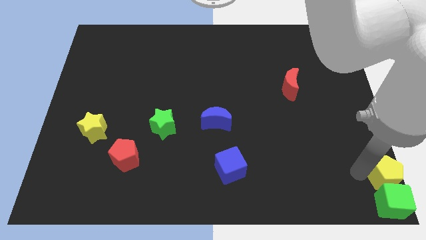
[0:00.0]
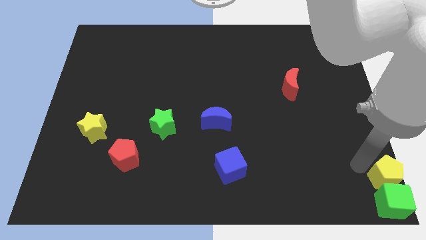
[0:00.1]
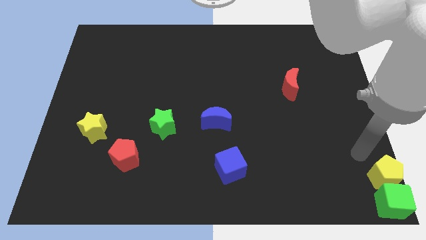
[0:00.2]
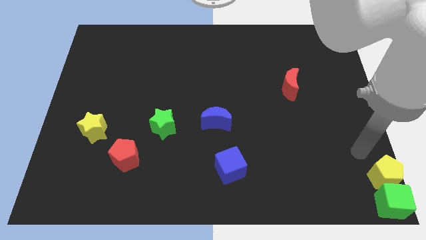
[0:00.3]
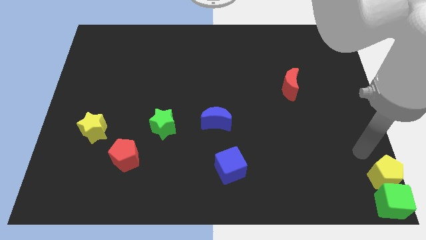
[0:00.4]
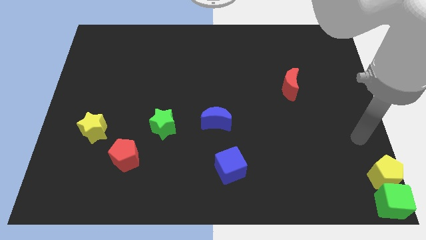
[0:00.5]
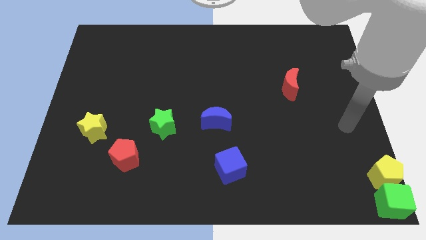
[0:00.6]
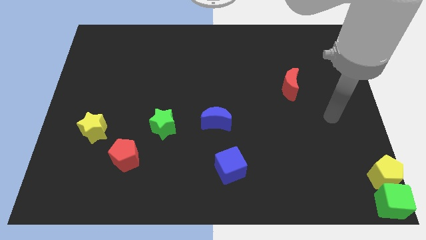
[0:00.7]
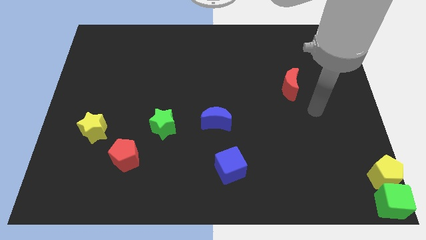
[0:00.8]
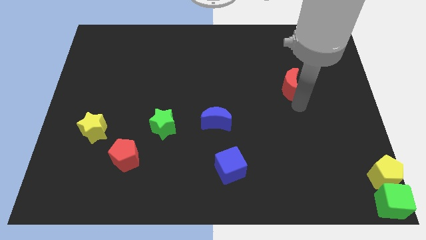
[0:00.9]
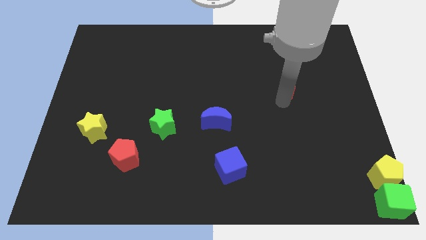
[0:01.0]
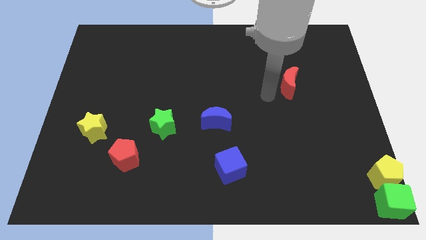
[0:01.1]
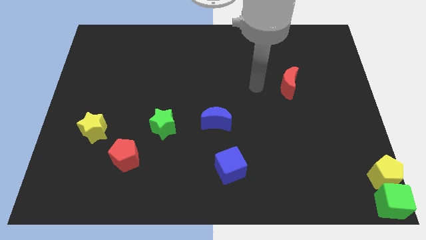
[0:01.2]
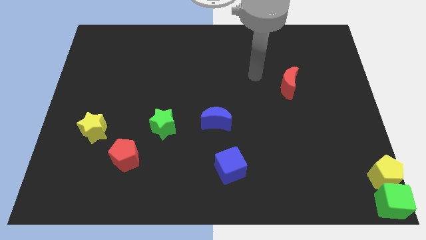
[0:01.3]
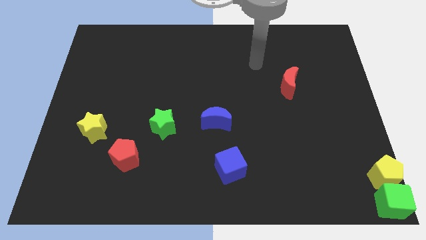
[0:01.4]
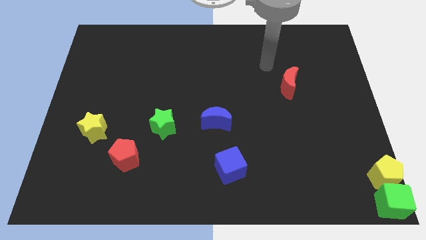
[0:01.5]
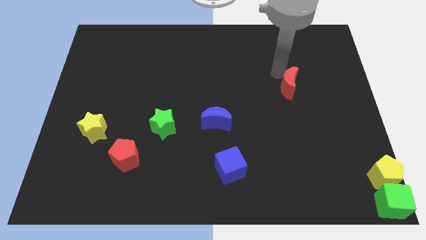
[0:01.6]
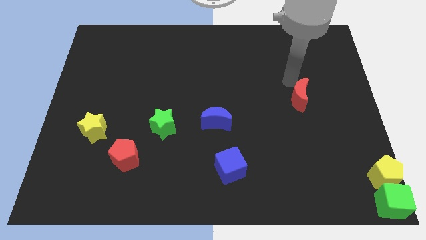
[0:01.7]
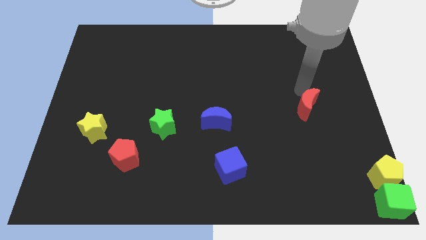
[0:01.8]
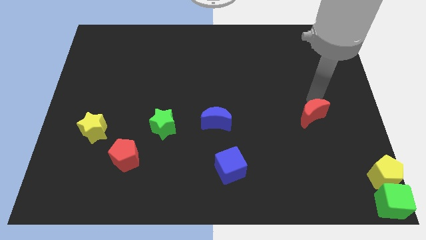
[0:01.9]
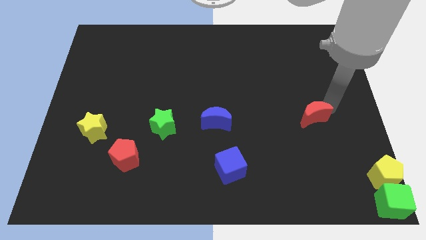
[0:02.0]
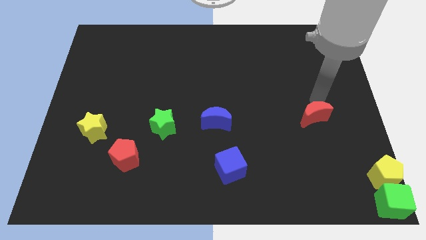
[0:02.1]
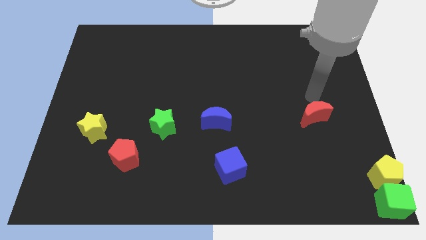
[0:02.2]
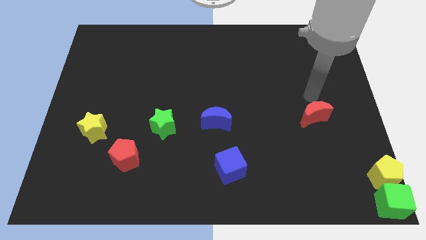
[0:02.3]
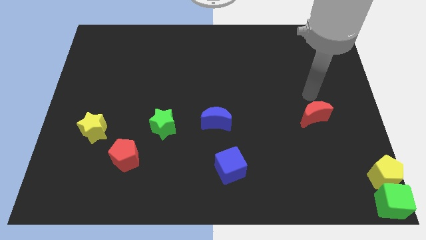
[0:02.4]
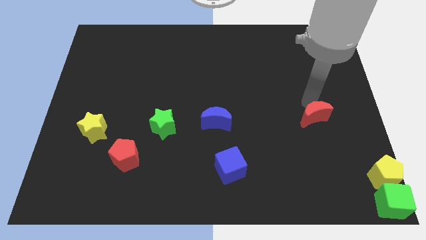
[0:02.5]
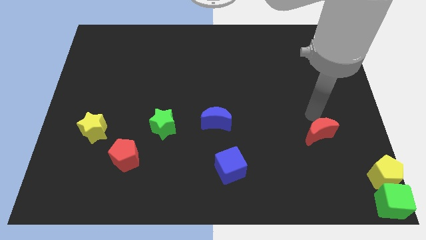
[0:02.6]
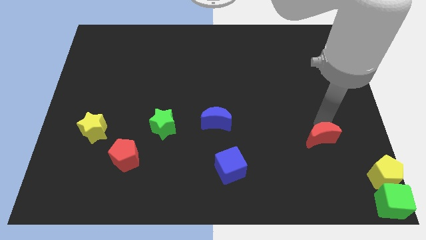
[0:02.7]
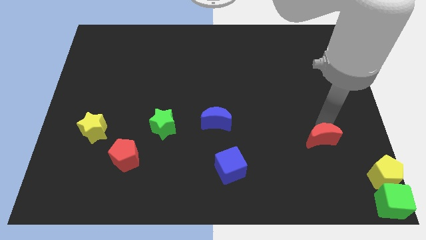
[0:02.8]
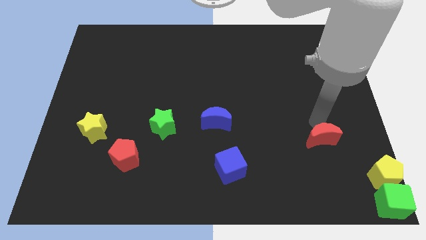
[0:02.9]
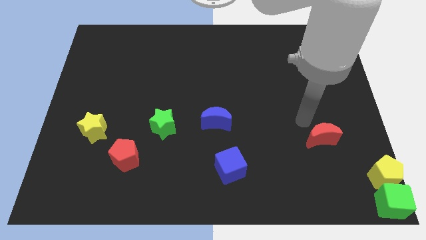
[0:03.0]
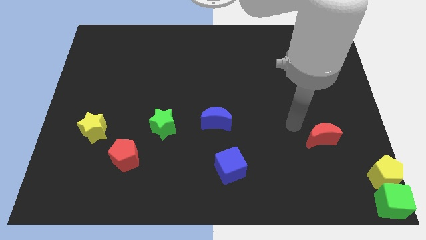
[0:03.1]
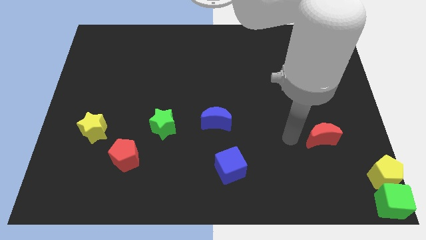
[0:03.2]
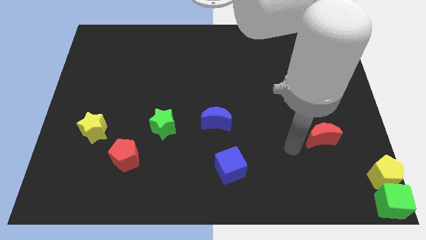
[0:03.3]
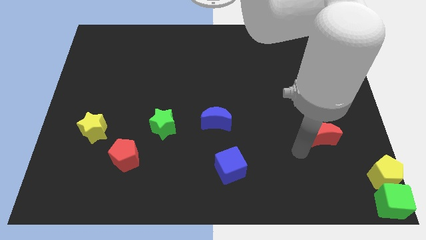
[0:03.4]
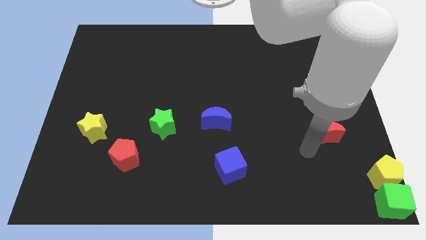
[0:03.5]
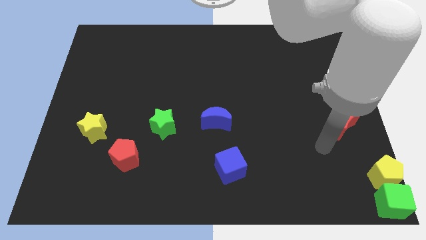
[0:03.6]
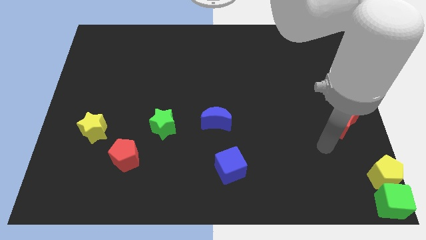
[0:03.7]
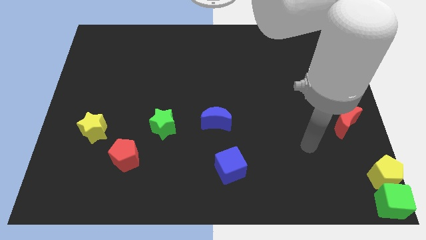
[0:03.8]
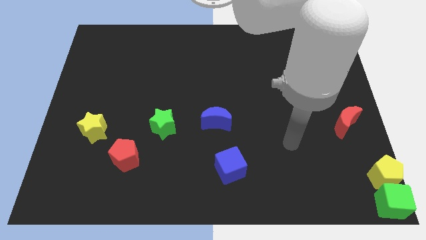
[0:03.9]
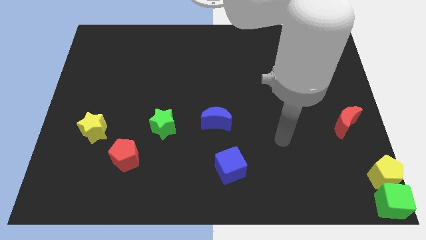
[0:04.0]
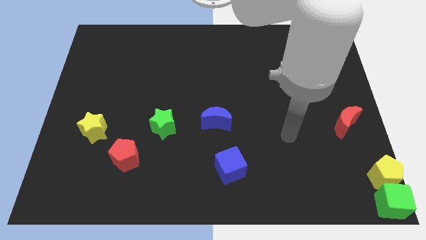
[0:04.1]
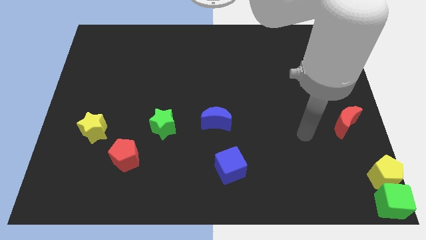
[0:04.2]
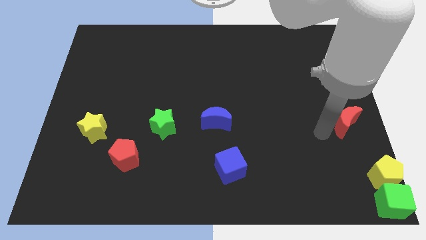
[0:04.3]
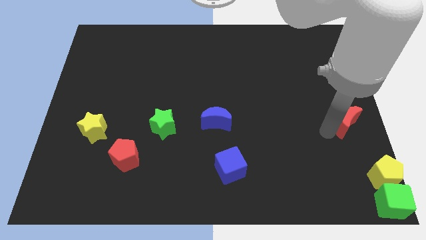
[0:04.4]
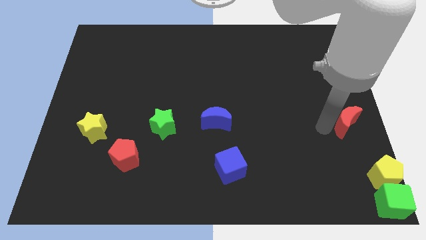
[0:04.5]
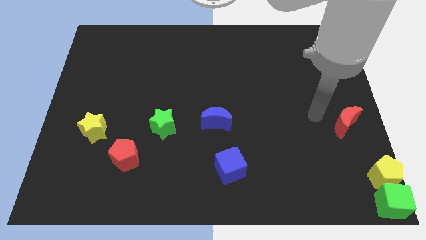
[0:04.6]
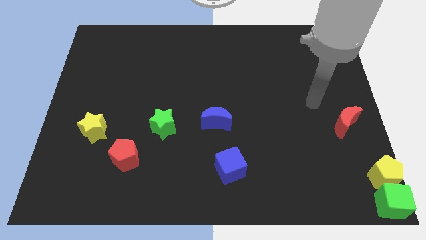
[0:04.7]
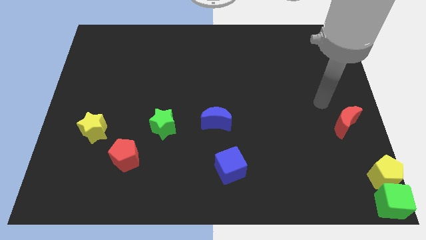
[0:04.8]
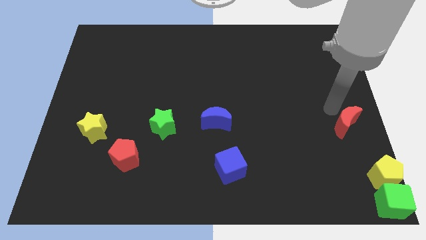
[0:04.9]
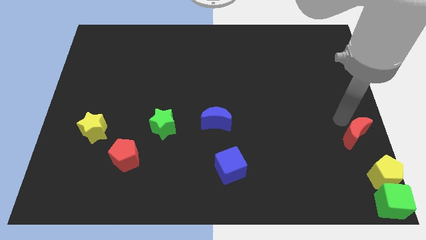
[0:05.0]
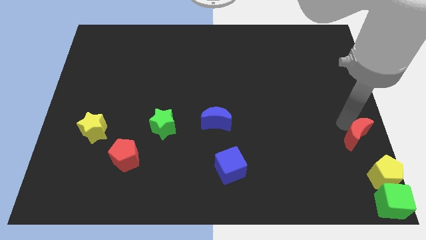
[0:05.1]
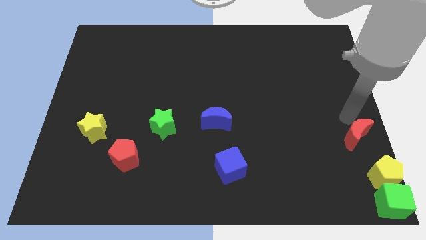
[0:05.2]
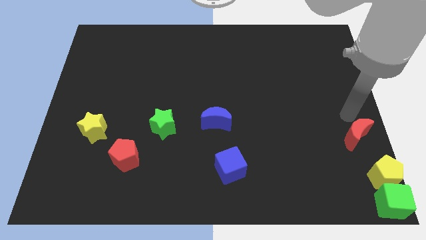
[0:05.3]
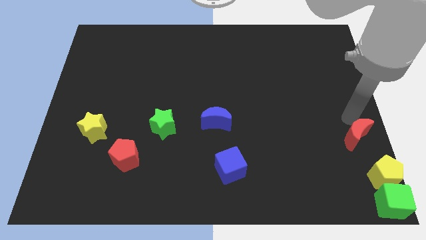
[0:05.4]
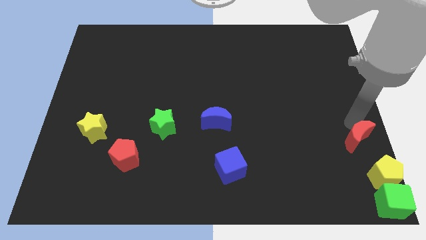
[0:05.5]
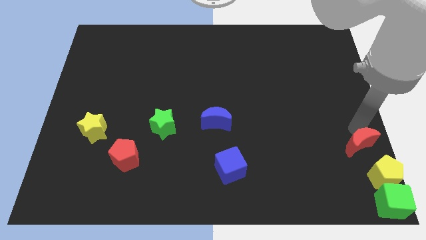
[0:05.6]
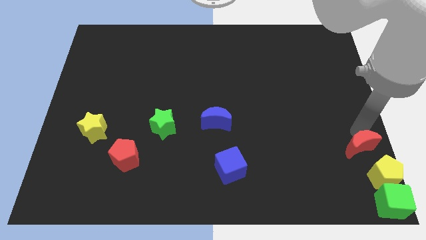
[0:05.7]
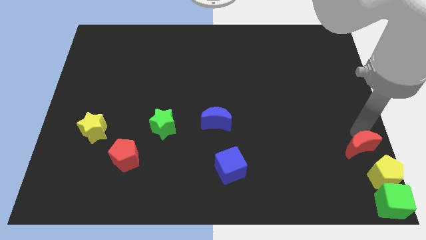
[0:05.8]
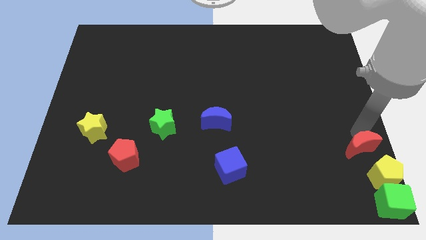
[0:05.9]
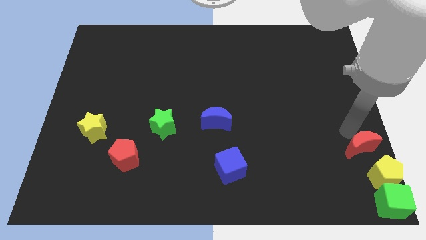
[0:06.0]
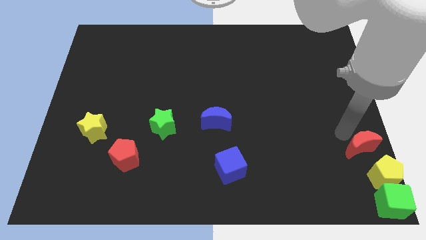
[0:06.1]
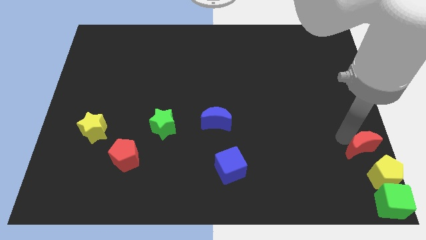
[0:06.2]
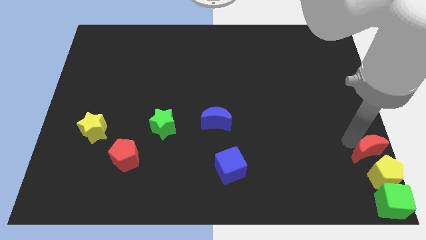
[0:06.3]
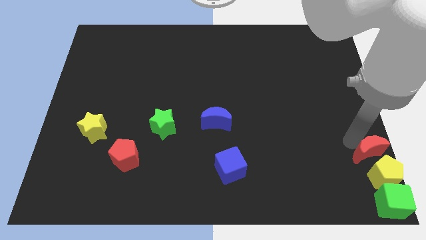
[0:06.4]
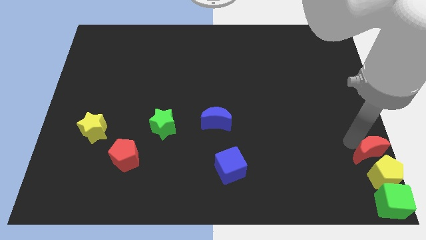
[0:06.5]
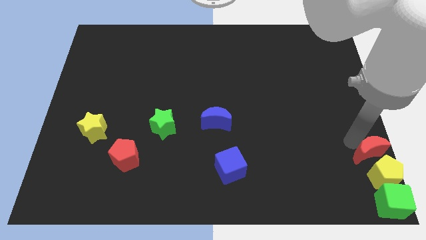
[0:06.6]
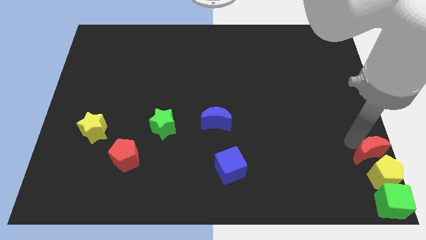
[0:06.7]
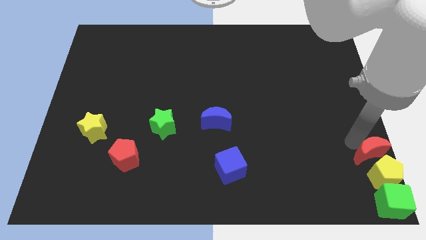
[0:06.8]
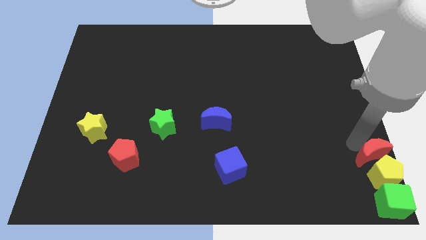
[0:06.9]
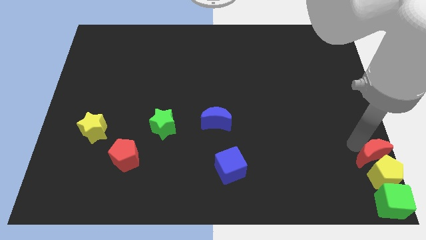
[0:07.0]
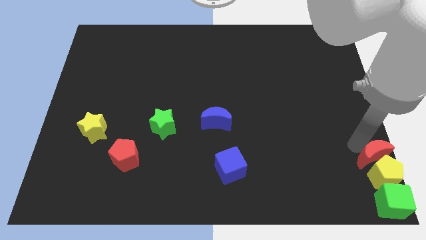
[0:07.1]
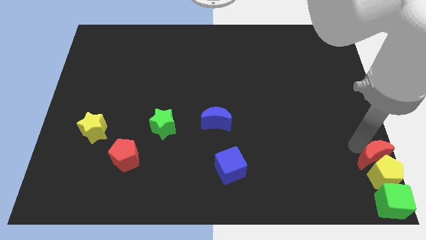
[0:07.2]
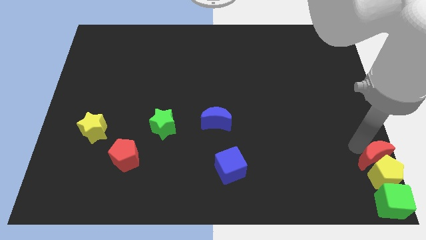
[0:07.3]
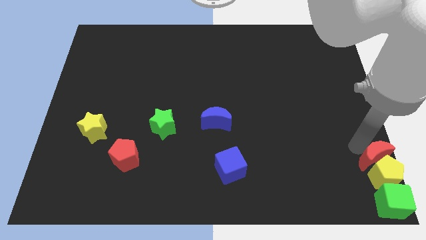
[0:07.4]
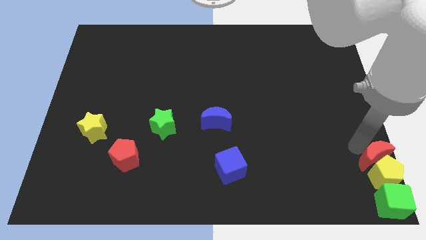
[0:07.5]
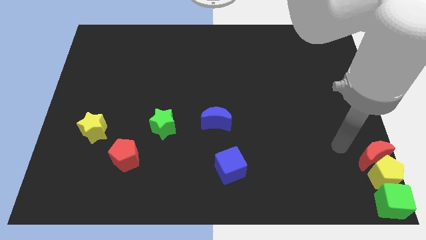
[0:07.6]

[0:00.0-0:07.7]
push the red crescent towards the yellow pentagon

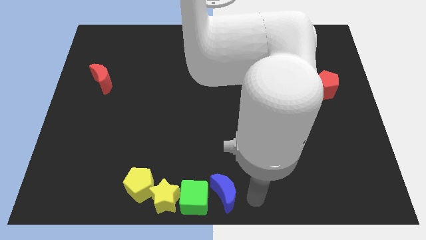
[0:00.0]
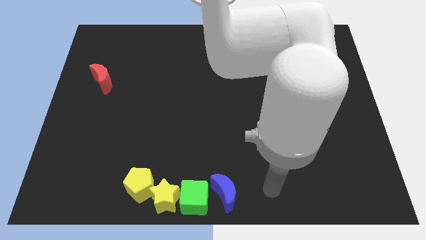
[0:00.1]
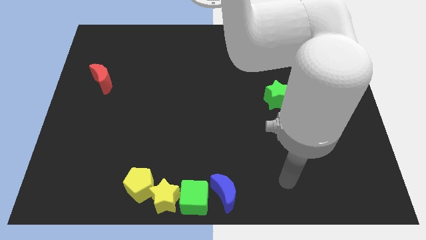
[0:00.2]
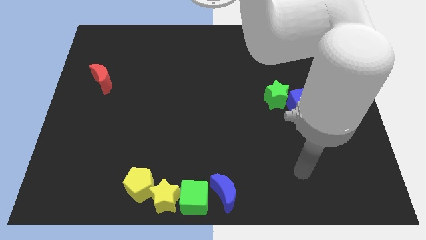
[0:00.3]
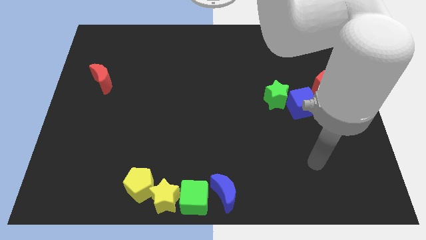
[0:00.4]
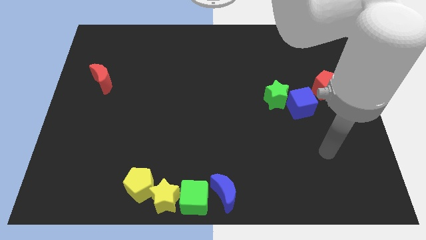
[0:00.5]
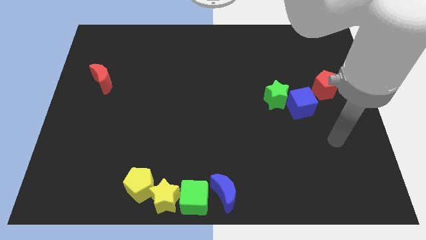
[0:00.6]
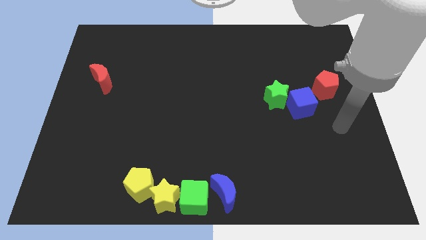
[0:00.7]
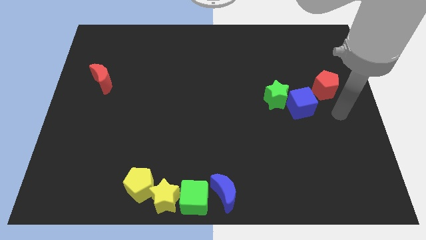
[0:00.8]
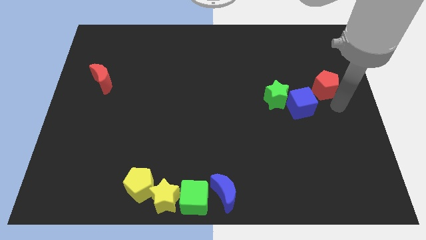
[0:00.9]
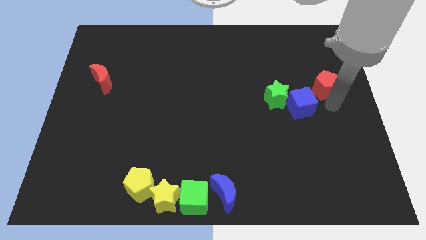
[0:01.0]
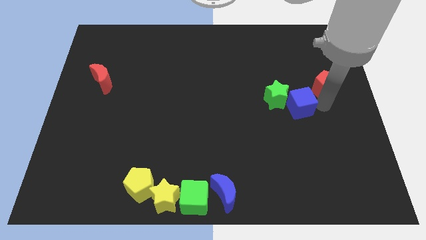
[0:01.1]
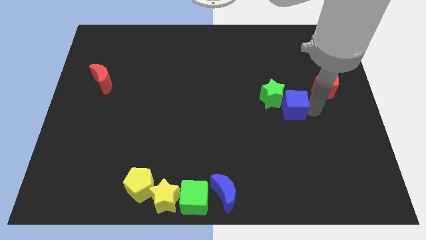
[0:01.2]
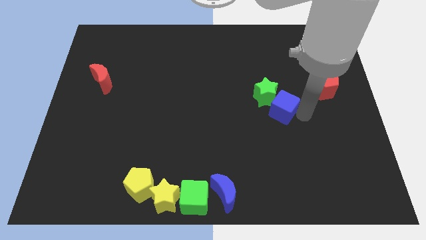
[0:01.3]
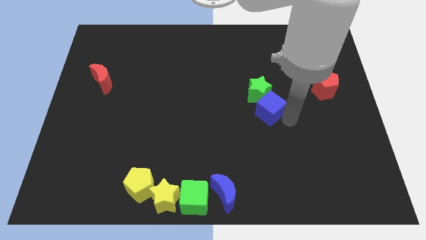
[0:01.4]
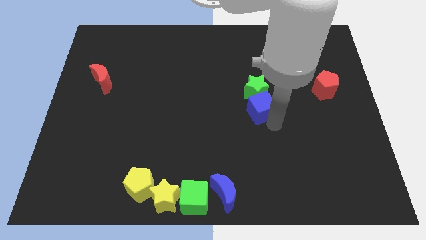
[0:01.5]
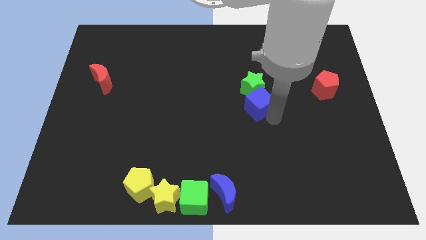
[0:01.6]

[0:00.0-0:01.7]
slide the blue cube to the bottom side of the green star
